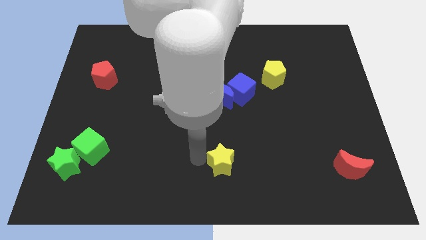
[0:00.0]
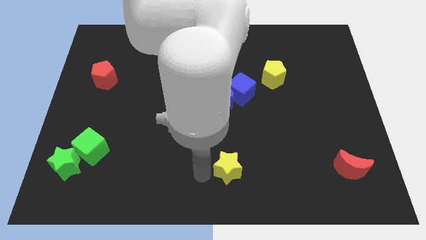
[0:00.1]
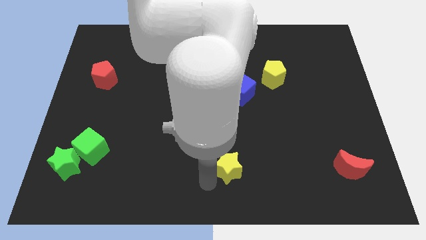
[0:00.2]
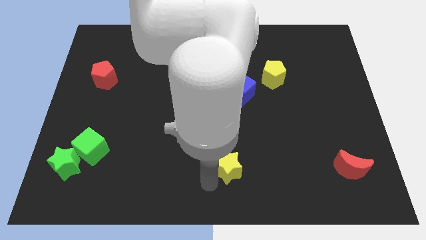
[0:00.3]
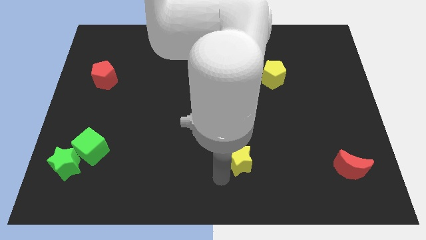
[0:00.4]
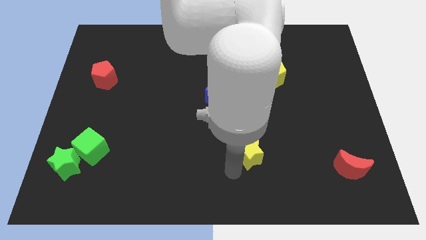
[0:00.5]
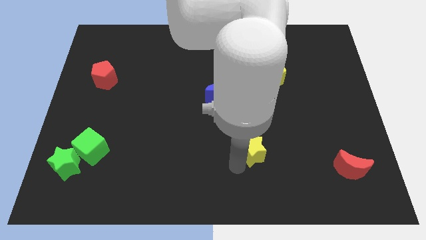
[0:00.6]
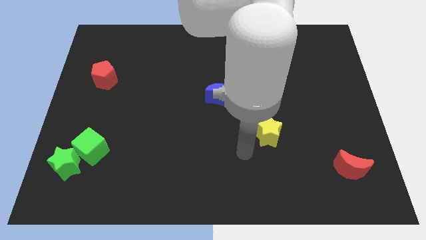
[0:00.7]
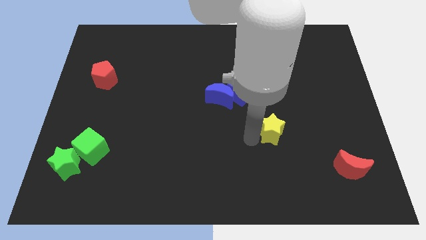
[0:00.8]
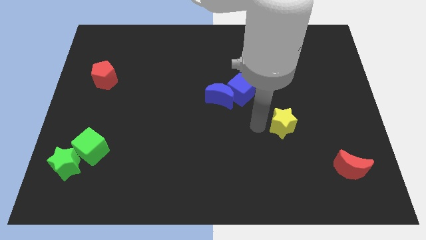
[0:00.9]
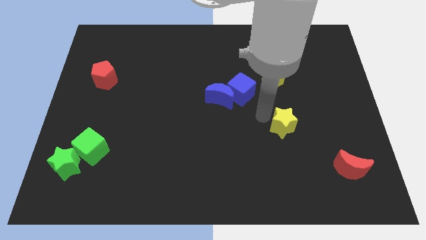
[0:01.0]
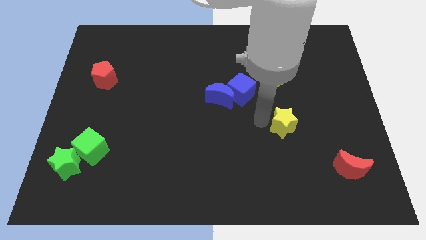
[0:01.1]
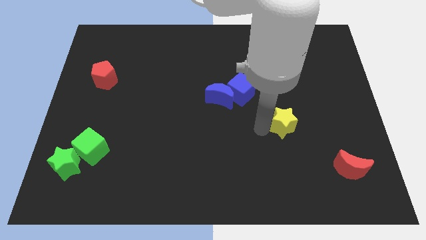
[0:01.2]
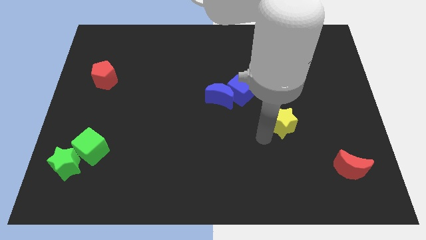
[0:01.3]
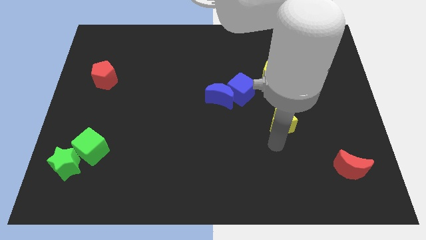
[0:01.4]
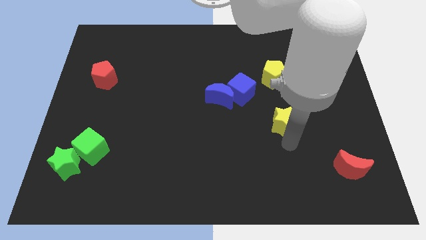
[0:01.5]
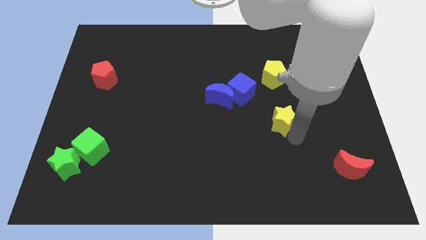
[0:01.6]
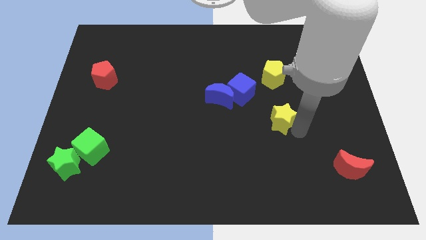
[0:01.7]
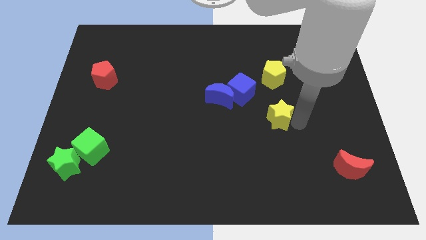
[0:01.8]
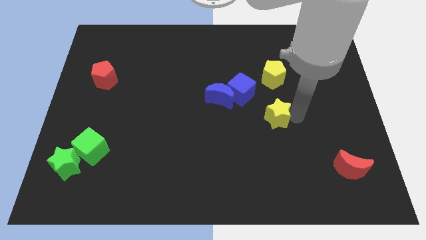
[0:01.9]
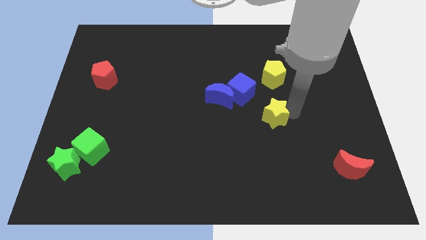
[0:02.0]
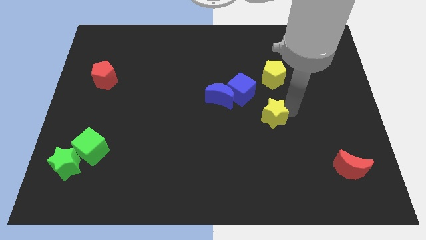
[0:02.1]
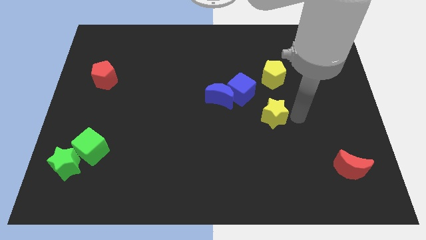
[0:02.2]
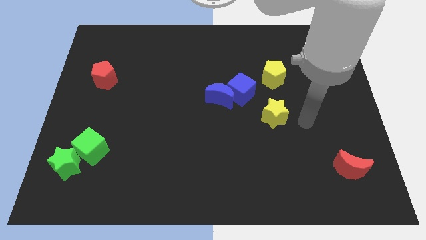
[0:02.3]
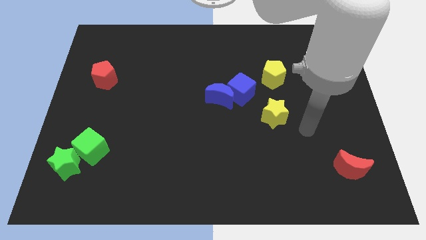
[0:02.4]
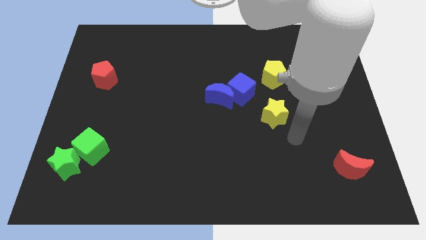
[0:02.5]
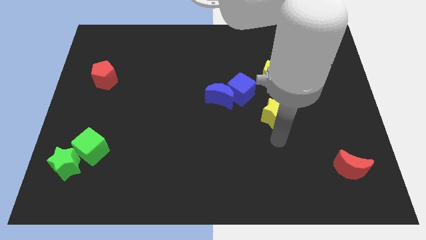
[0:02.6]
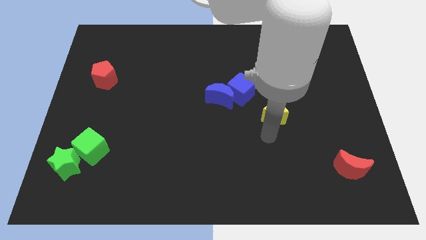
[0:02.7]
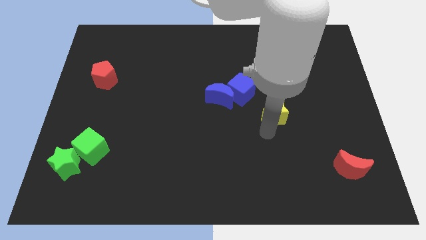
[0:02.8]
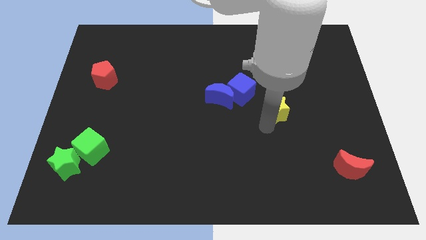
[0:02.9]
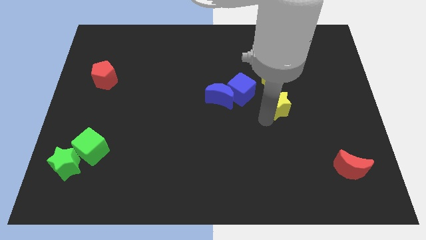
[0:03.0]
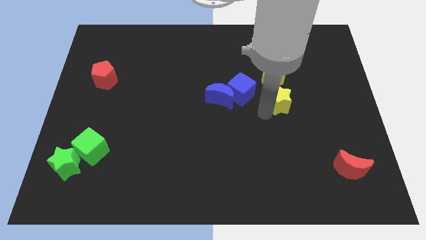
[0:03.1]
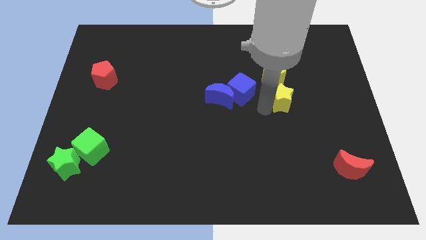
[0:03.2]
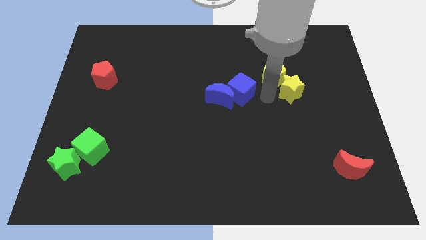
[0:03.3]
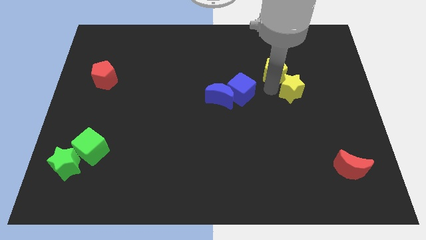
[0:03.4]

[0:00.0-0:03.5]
place the yellow star parallel to blue cube

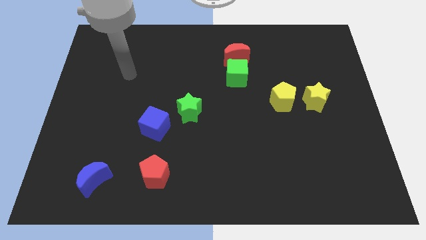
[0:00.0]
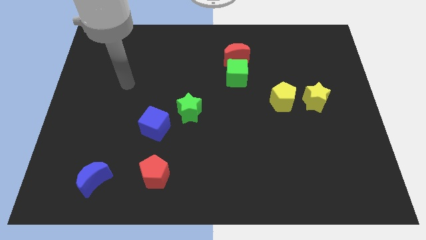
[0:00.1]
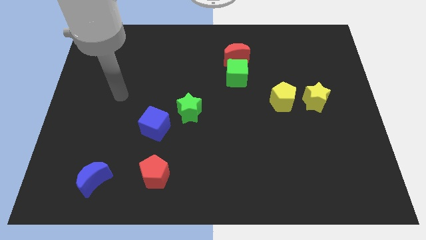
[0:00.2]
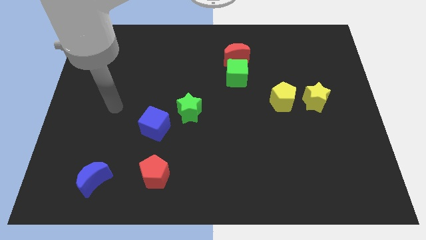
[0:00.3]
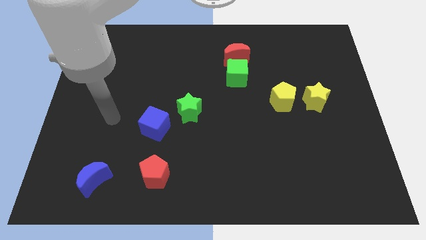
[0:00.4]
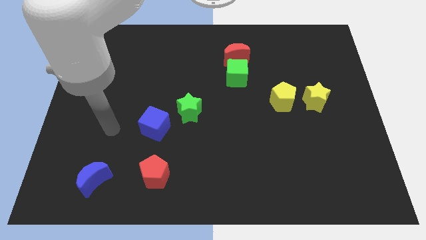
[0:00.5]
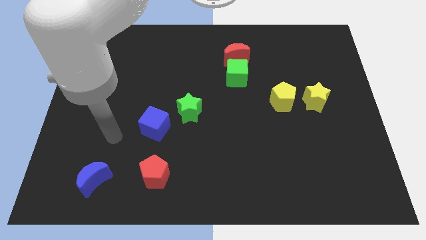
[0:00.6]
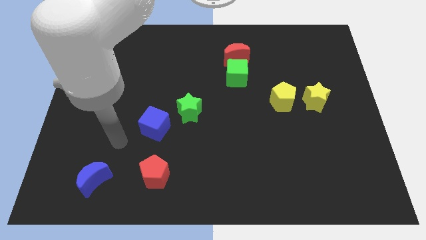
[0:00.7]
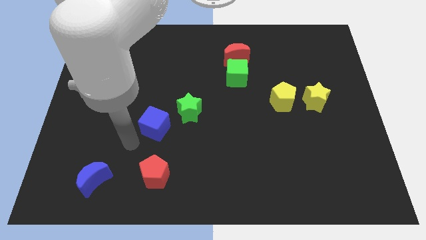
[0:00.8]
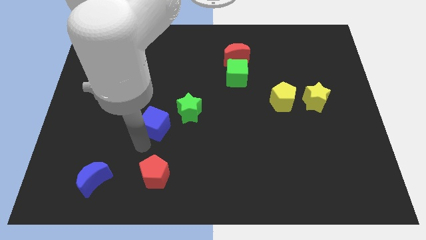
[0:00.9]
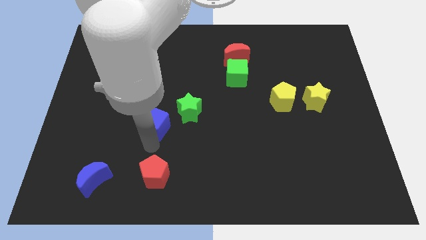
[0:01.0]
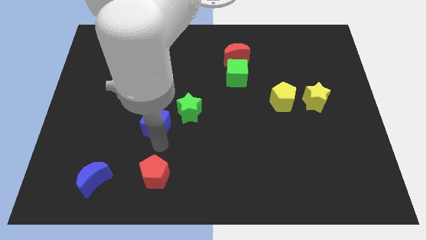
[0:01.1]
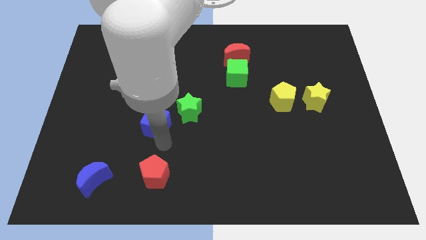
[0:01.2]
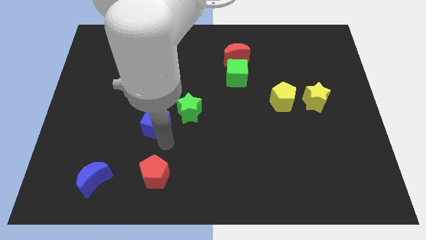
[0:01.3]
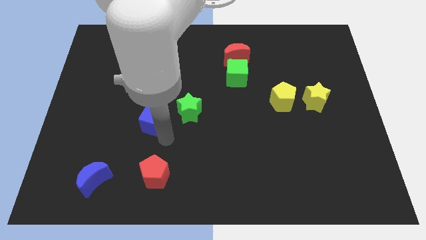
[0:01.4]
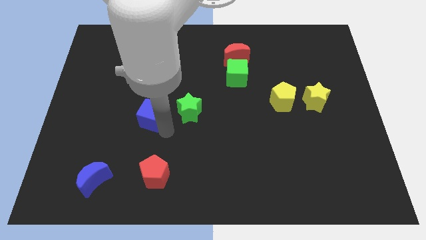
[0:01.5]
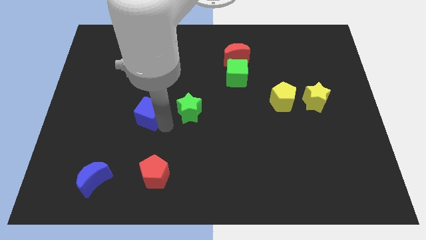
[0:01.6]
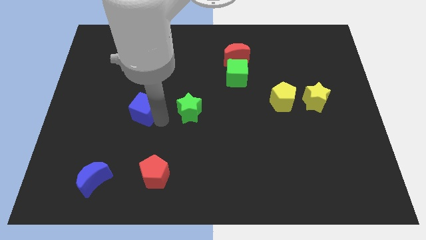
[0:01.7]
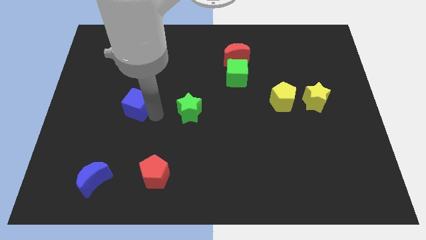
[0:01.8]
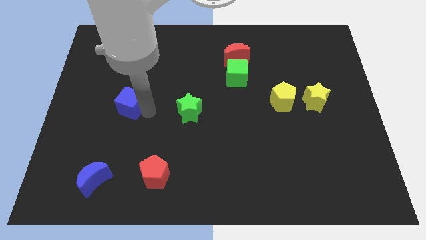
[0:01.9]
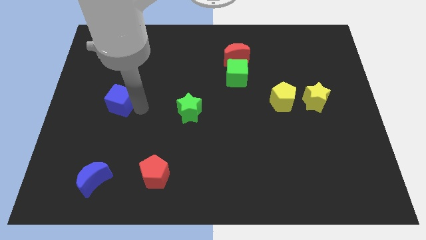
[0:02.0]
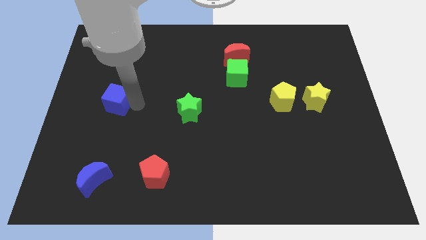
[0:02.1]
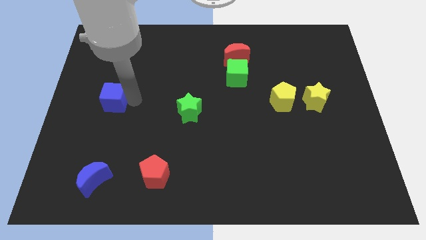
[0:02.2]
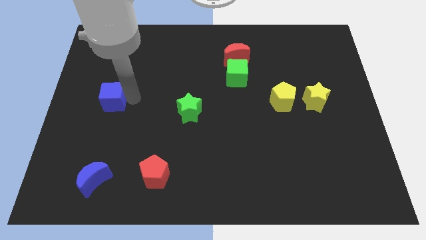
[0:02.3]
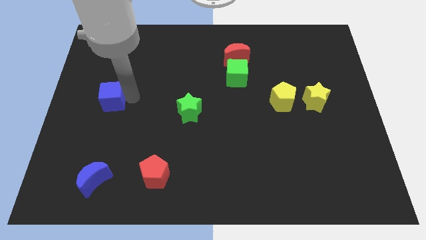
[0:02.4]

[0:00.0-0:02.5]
move the blue cube to the left of the board

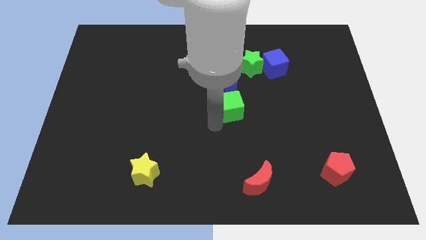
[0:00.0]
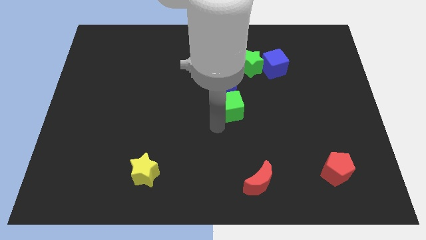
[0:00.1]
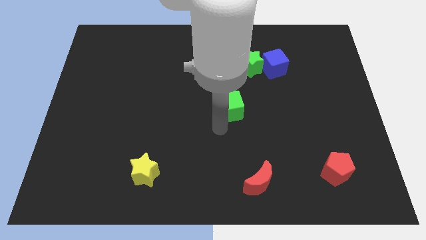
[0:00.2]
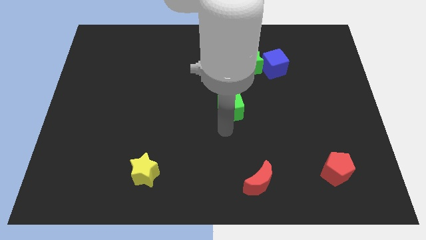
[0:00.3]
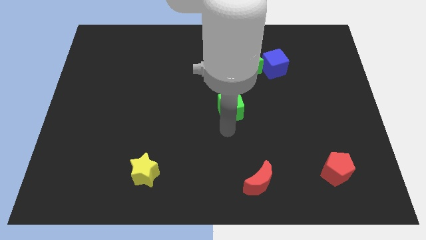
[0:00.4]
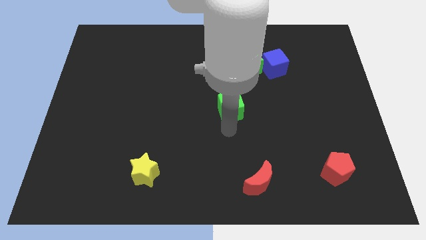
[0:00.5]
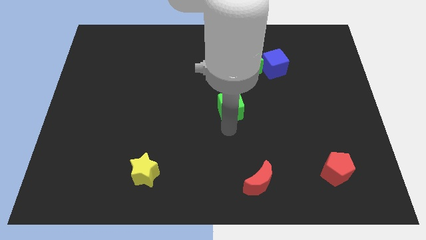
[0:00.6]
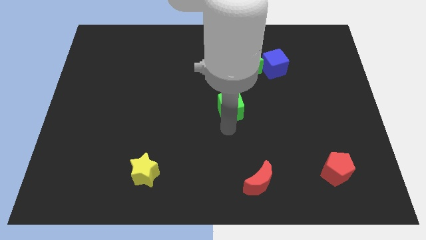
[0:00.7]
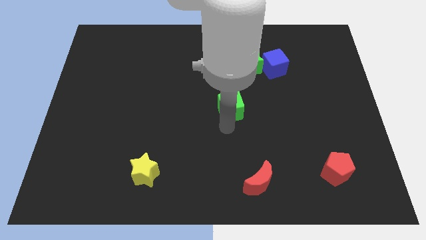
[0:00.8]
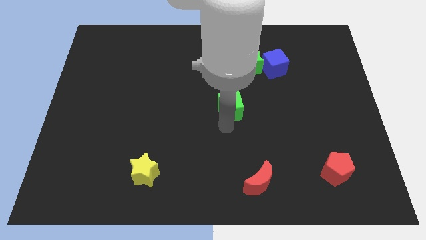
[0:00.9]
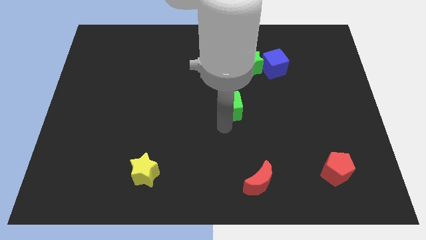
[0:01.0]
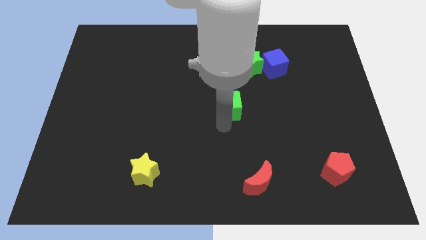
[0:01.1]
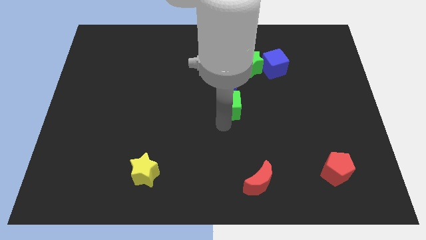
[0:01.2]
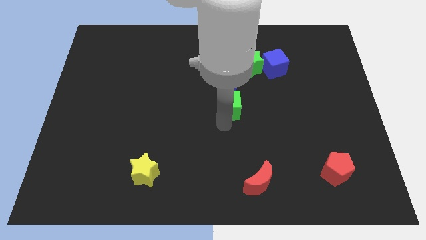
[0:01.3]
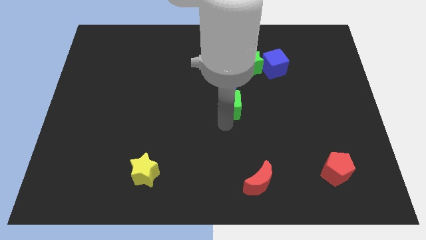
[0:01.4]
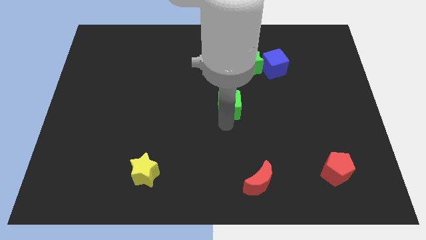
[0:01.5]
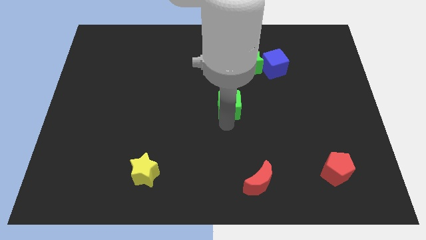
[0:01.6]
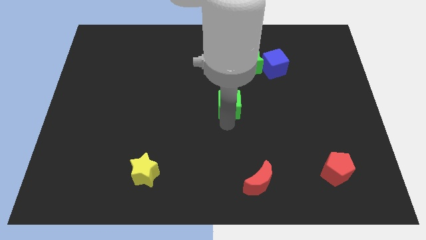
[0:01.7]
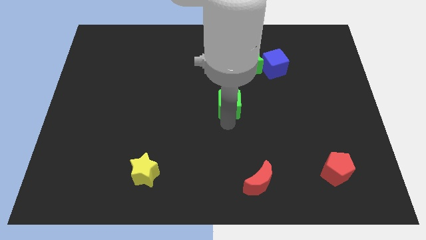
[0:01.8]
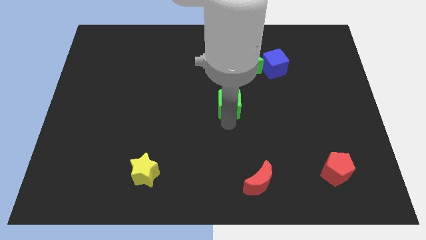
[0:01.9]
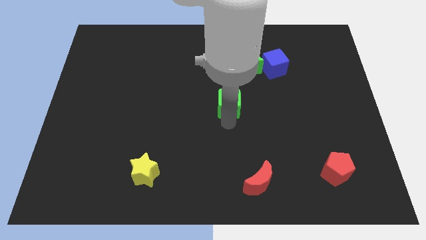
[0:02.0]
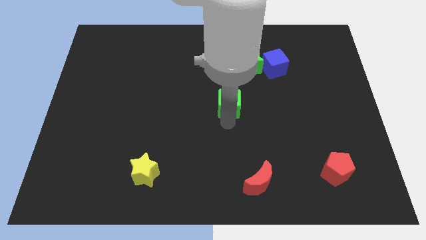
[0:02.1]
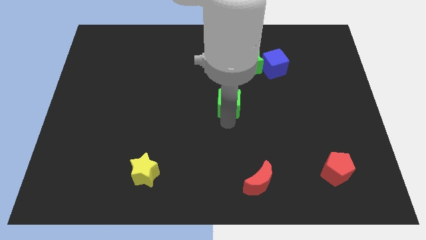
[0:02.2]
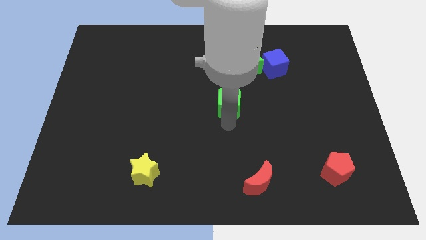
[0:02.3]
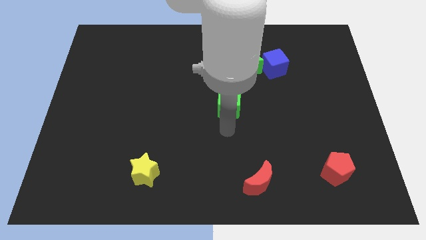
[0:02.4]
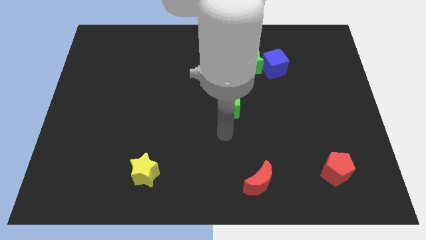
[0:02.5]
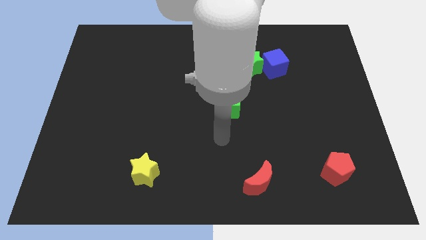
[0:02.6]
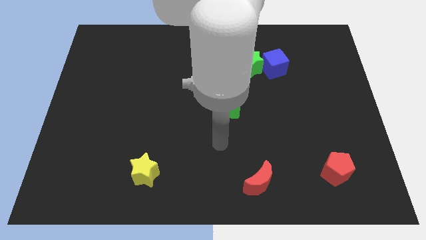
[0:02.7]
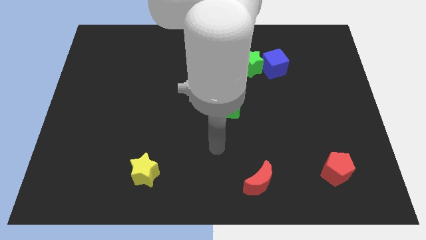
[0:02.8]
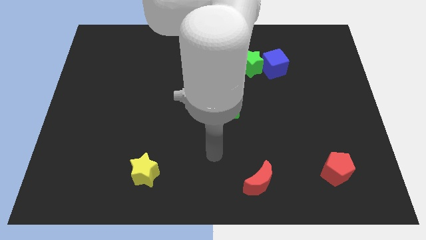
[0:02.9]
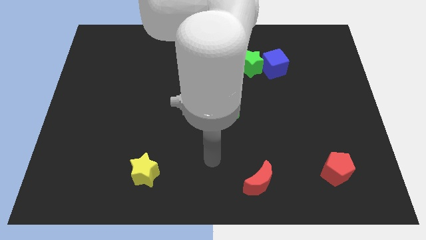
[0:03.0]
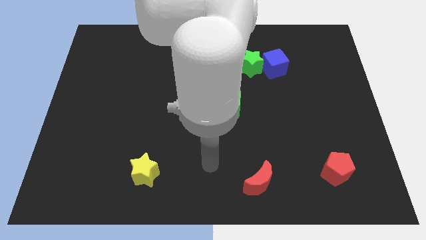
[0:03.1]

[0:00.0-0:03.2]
move the green cube into the bottom of the blue crescent
